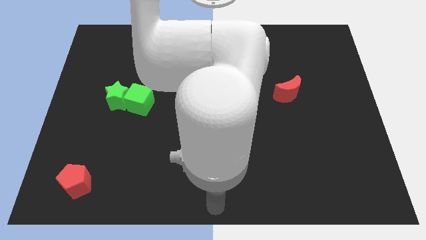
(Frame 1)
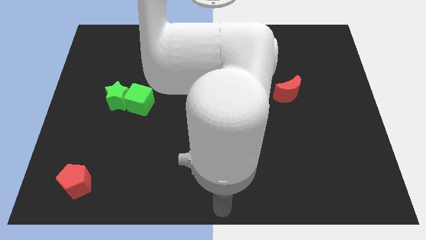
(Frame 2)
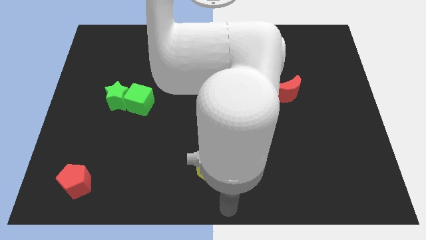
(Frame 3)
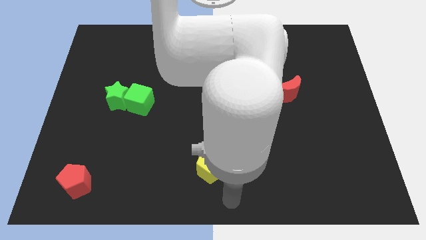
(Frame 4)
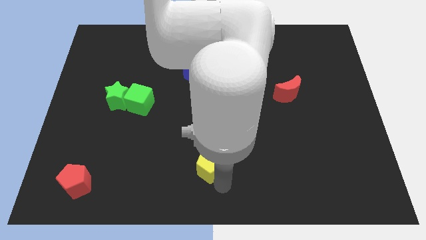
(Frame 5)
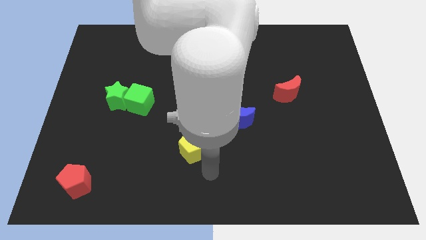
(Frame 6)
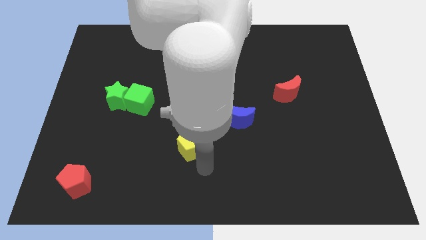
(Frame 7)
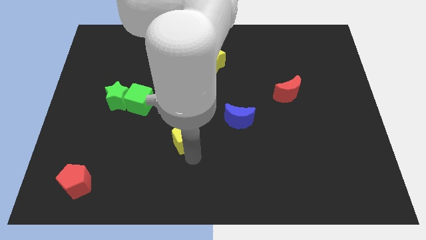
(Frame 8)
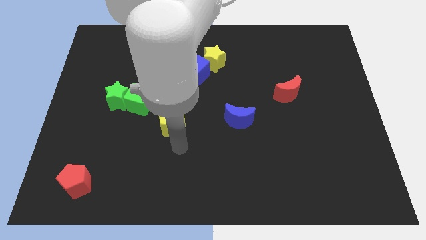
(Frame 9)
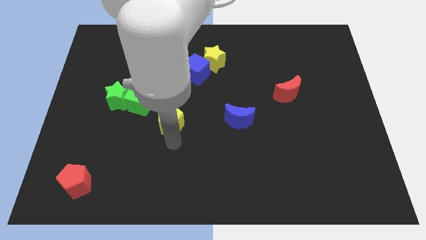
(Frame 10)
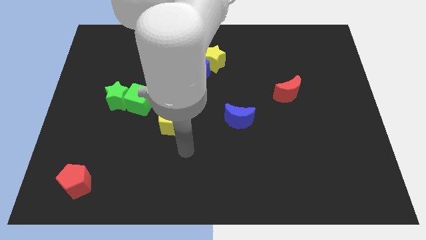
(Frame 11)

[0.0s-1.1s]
push the yellow pentagon towards the green cube

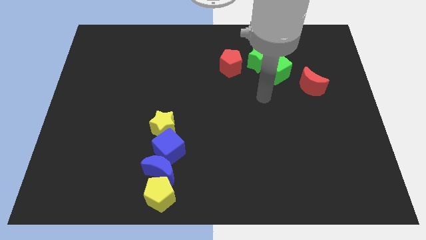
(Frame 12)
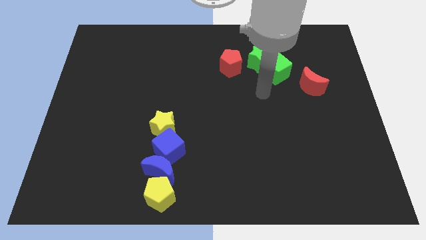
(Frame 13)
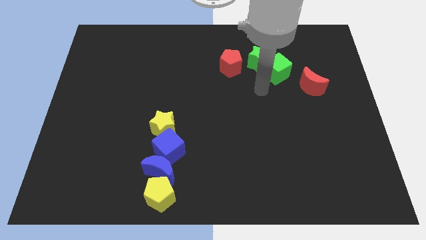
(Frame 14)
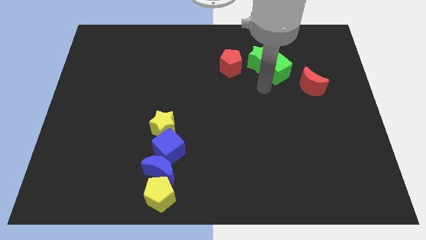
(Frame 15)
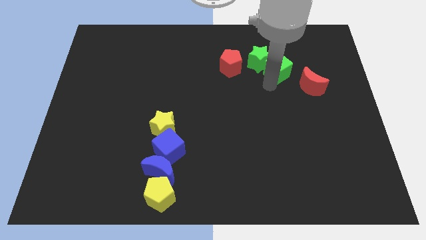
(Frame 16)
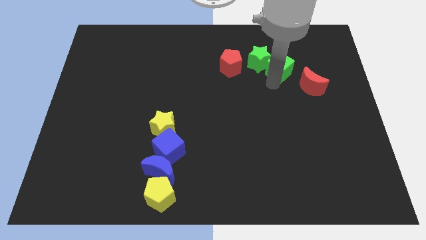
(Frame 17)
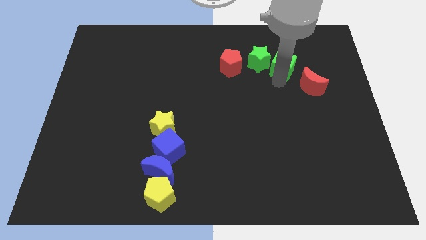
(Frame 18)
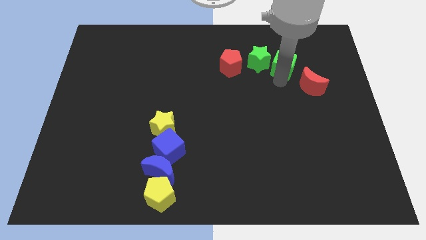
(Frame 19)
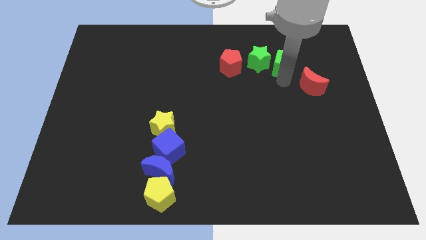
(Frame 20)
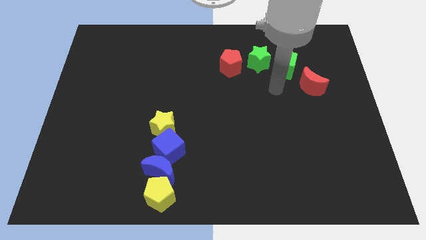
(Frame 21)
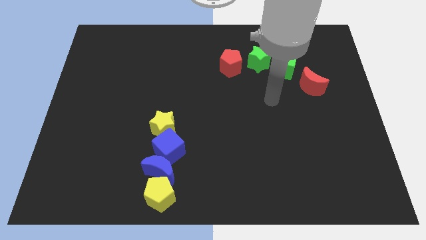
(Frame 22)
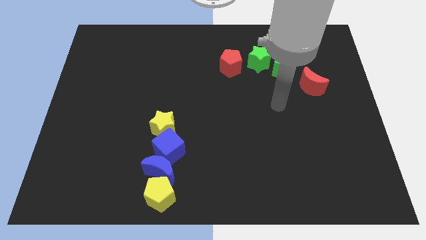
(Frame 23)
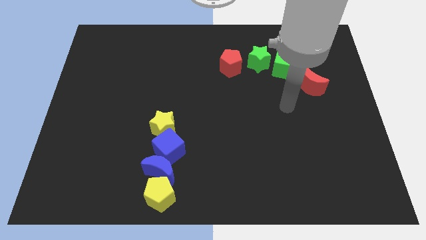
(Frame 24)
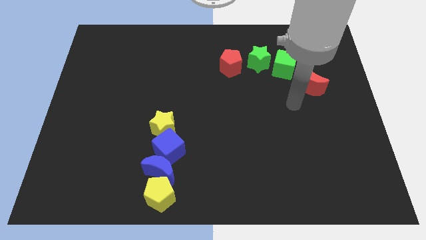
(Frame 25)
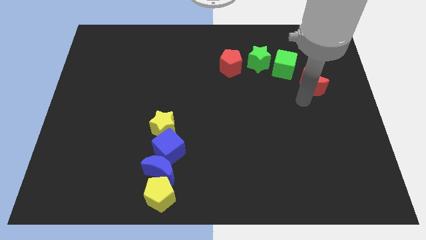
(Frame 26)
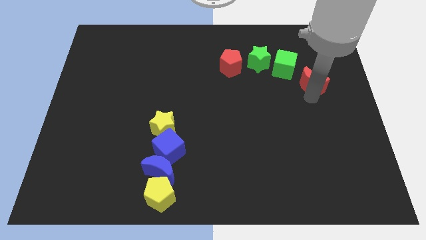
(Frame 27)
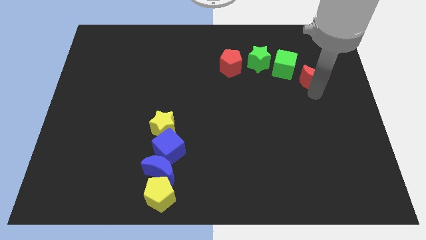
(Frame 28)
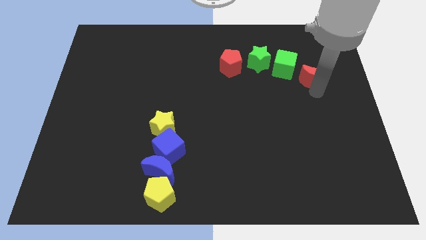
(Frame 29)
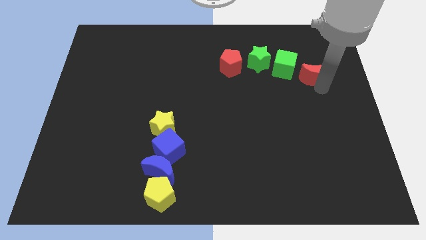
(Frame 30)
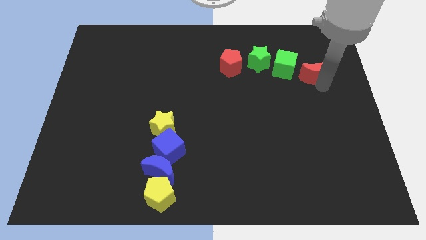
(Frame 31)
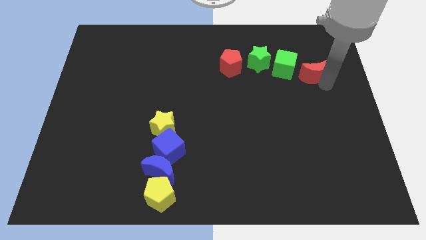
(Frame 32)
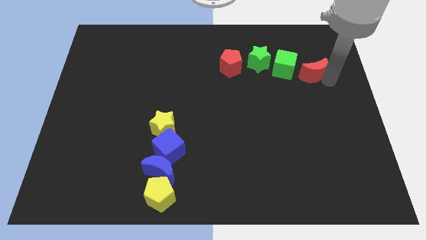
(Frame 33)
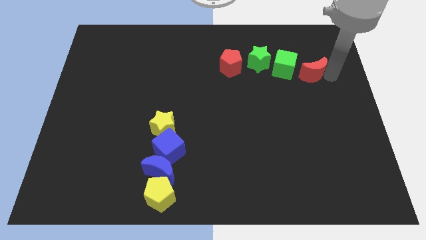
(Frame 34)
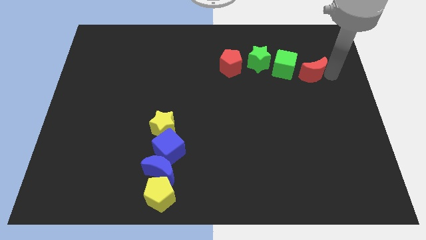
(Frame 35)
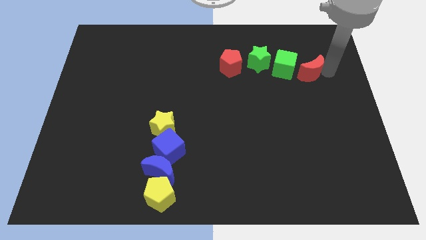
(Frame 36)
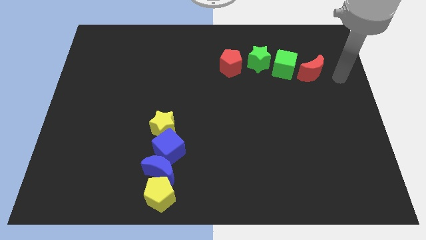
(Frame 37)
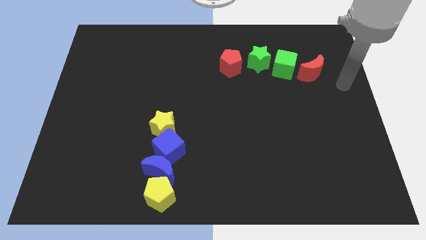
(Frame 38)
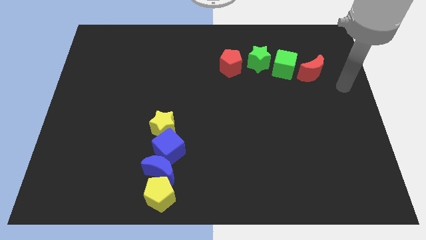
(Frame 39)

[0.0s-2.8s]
drag green cube and red crescent slightly to the top left of board

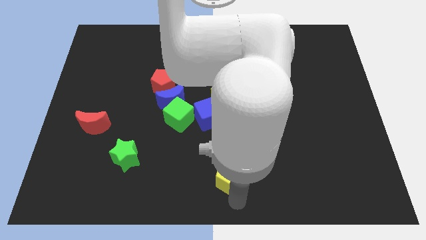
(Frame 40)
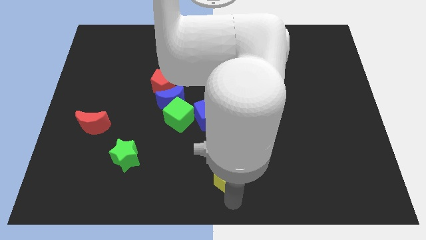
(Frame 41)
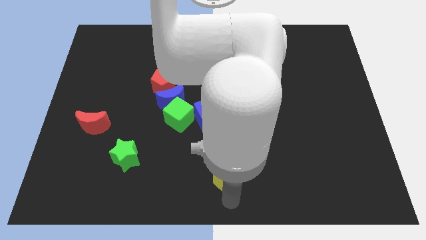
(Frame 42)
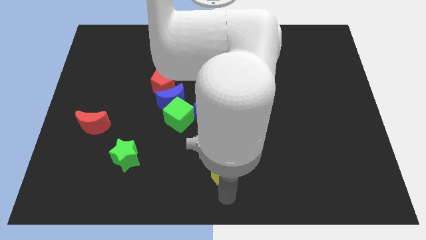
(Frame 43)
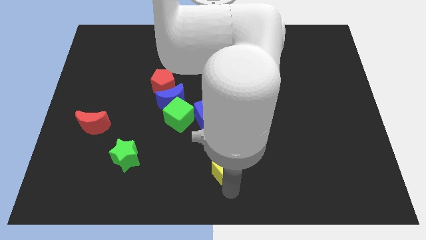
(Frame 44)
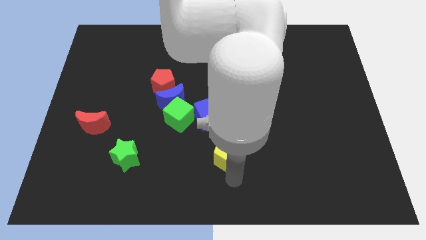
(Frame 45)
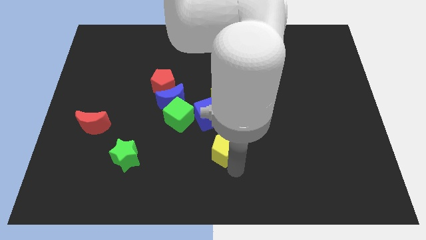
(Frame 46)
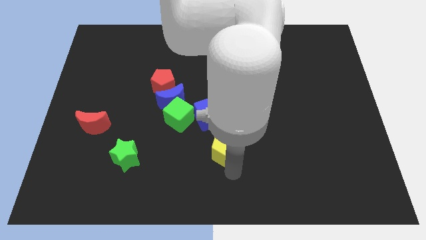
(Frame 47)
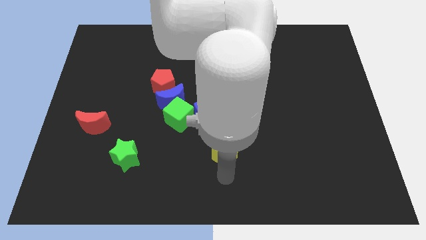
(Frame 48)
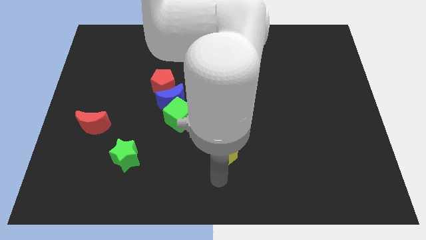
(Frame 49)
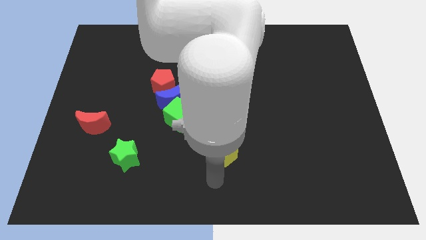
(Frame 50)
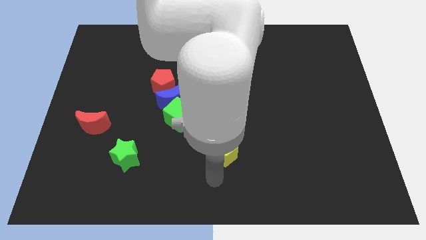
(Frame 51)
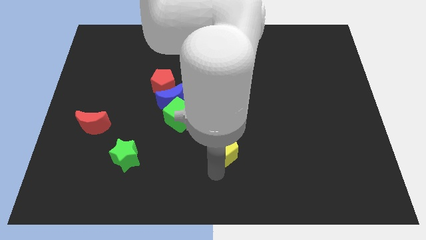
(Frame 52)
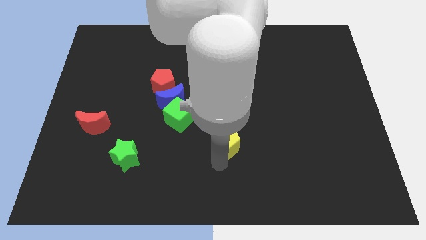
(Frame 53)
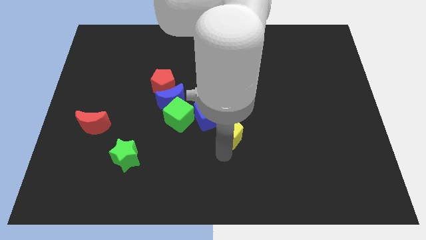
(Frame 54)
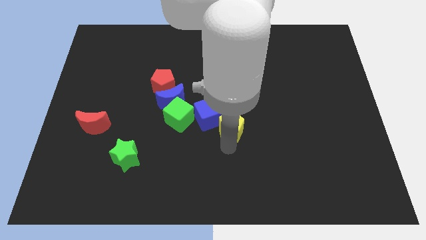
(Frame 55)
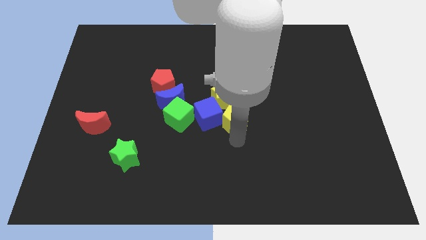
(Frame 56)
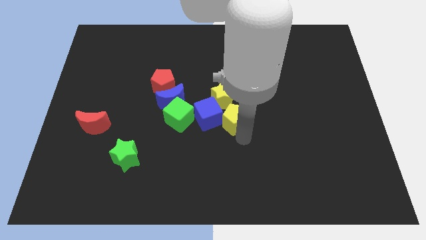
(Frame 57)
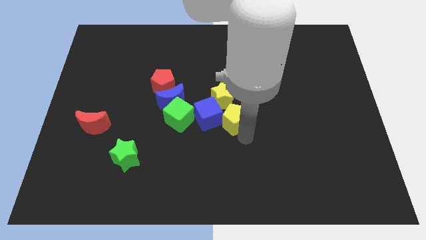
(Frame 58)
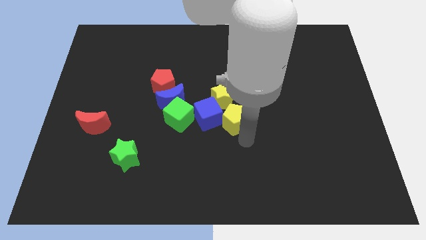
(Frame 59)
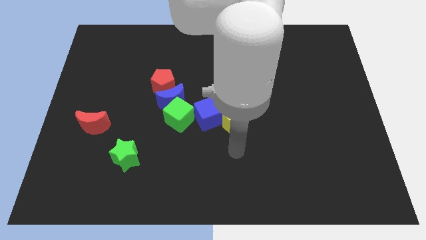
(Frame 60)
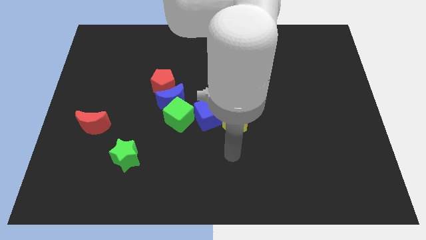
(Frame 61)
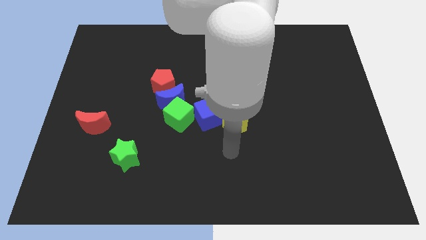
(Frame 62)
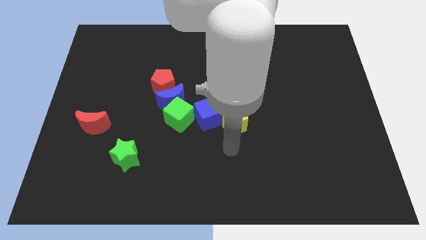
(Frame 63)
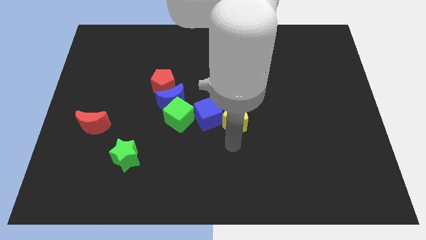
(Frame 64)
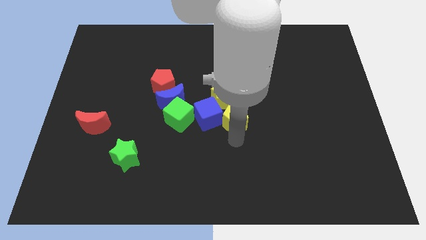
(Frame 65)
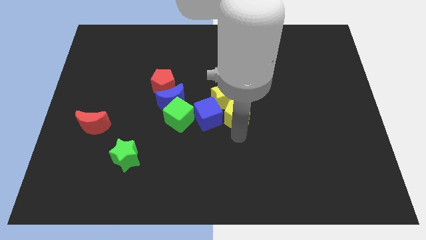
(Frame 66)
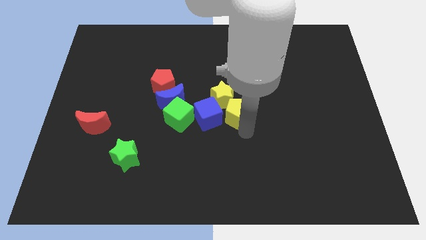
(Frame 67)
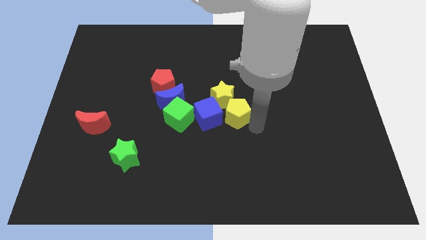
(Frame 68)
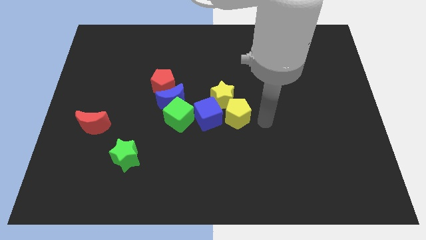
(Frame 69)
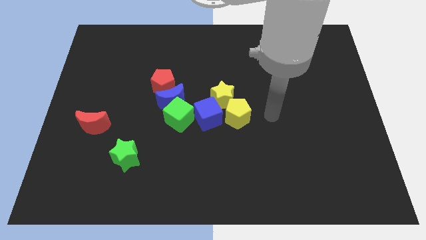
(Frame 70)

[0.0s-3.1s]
push the yellow pentagon into the bottom of the yellow star

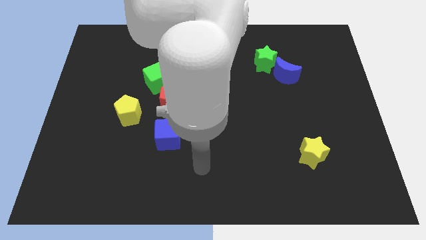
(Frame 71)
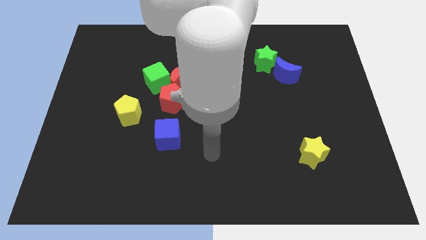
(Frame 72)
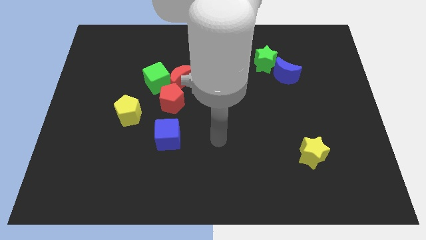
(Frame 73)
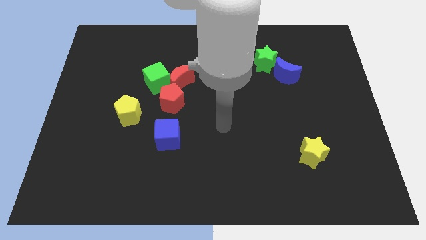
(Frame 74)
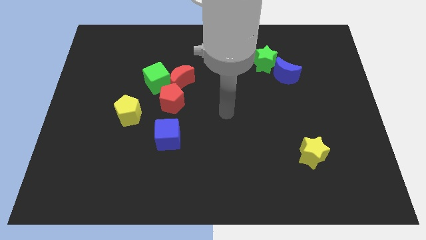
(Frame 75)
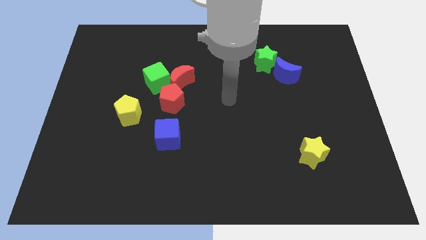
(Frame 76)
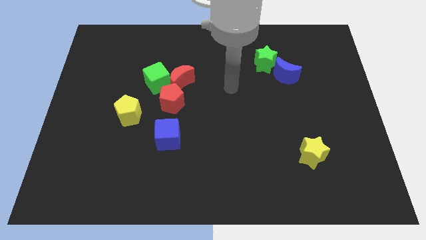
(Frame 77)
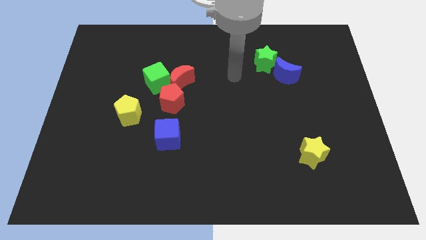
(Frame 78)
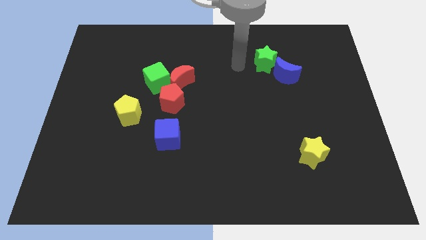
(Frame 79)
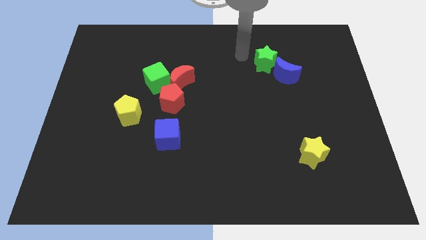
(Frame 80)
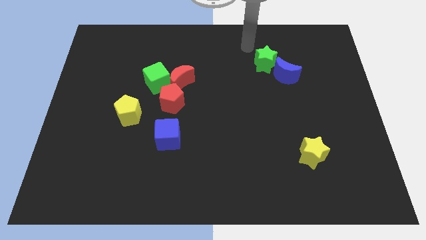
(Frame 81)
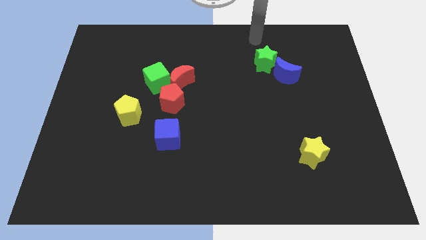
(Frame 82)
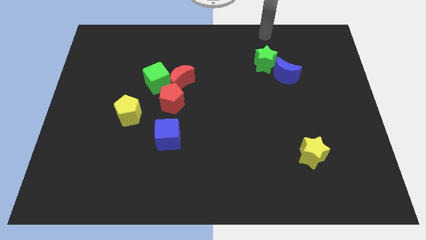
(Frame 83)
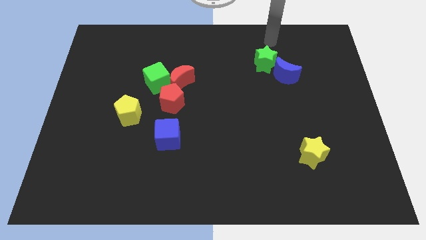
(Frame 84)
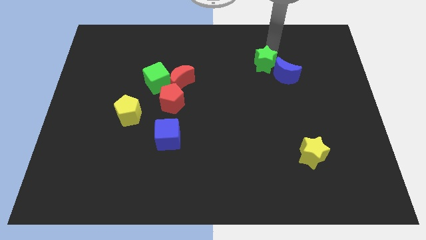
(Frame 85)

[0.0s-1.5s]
move arm towards the green star on the top right of the board

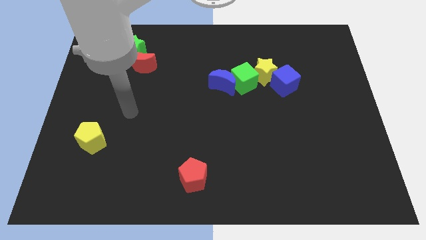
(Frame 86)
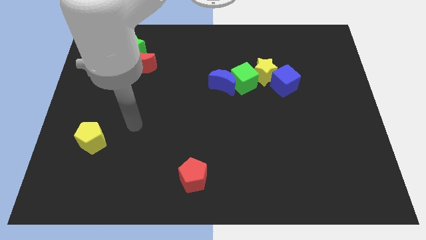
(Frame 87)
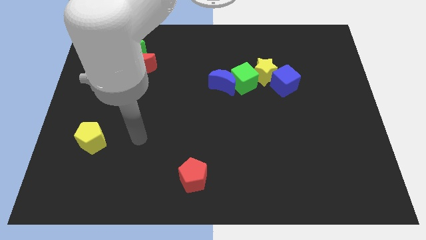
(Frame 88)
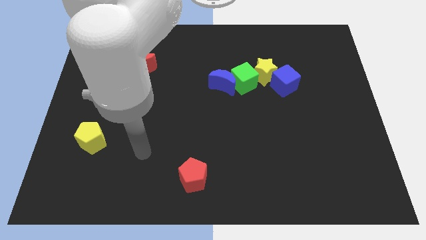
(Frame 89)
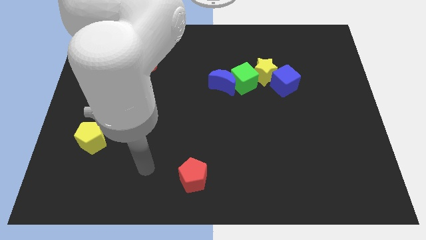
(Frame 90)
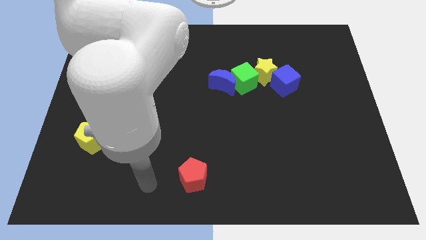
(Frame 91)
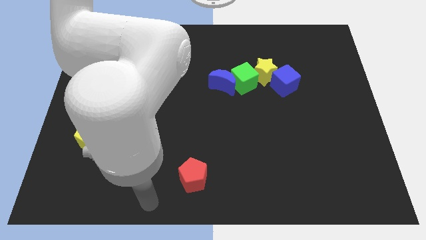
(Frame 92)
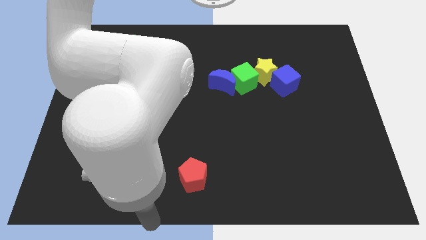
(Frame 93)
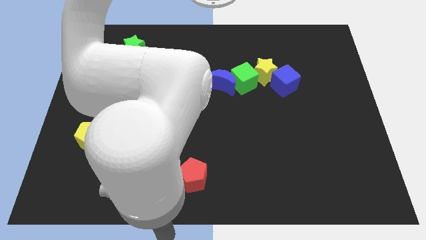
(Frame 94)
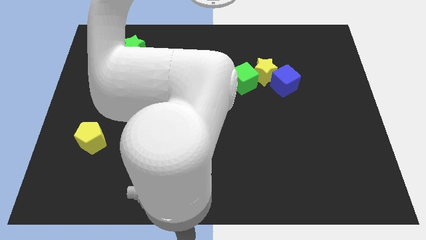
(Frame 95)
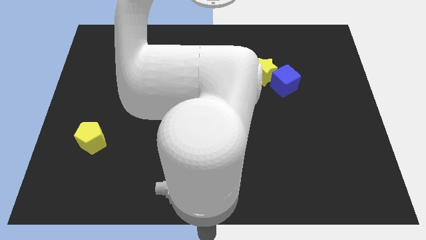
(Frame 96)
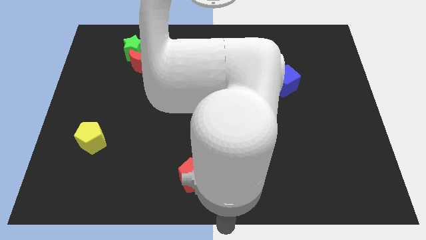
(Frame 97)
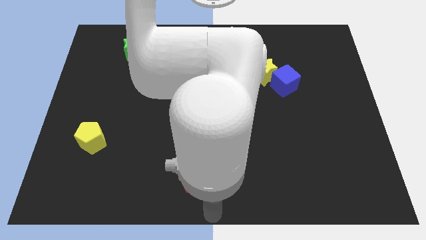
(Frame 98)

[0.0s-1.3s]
place your arm to the bottom center of the board
